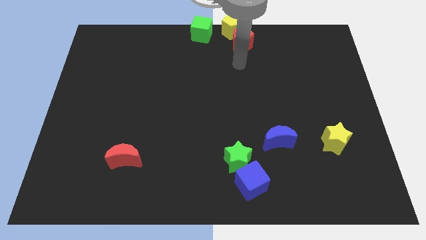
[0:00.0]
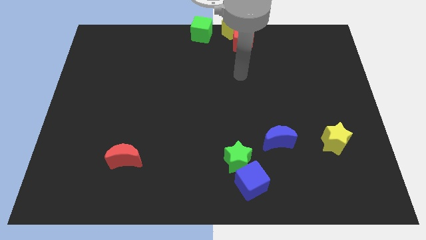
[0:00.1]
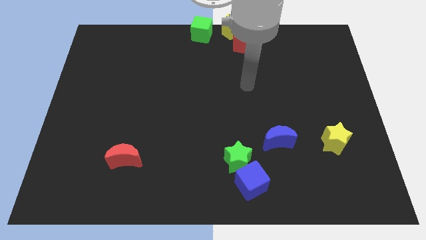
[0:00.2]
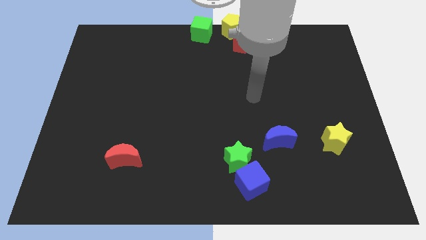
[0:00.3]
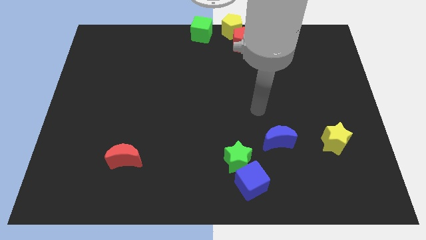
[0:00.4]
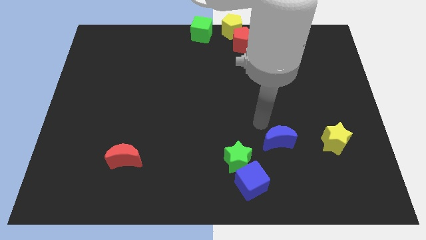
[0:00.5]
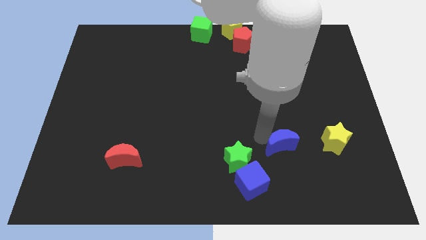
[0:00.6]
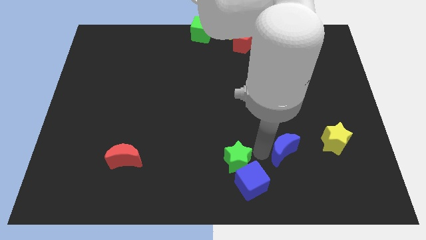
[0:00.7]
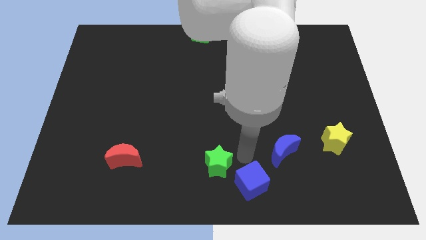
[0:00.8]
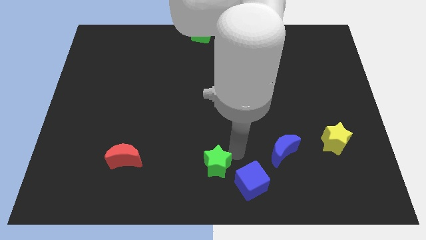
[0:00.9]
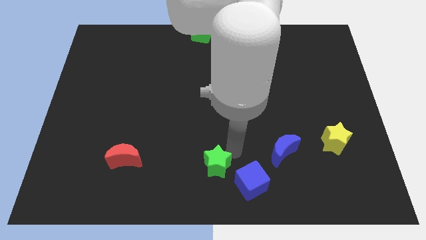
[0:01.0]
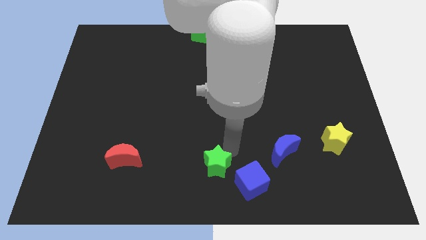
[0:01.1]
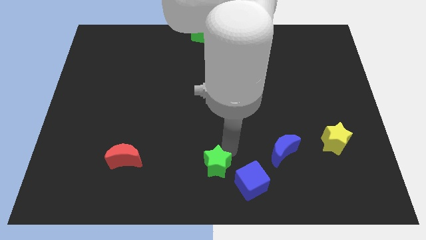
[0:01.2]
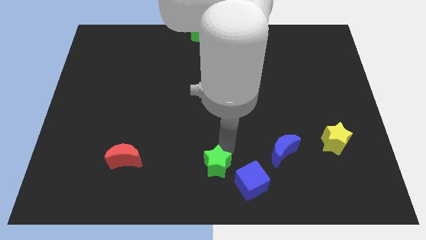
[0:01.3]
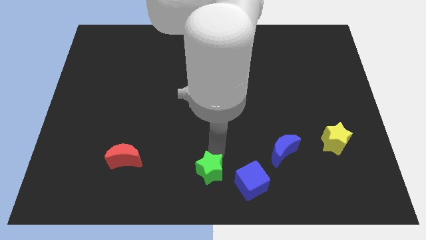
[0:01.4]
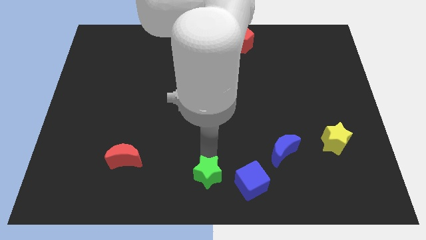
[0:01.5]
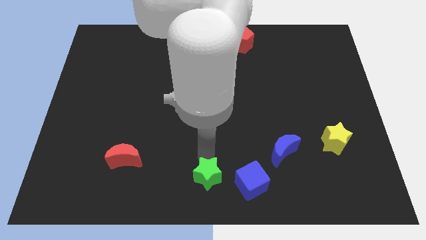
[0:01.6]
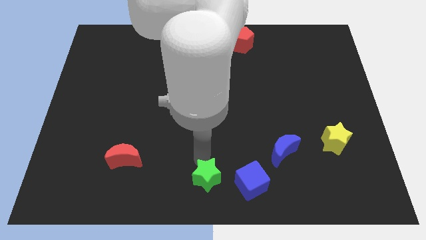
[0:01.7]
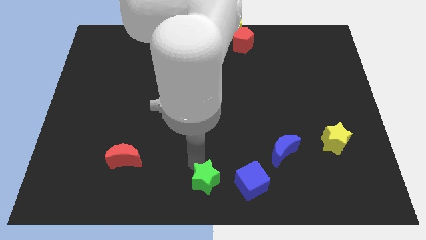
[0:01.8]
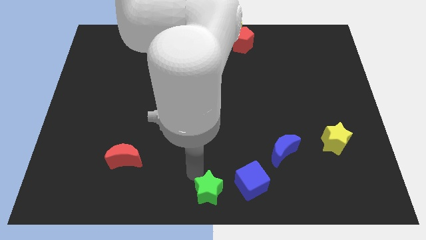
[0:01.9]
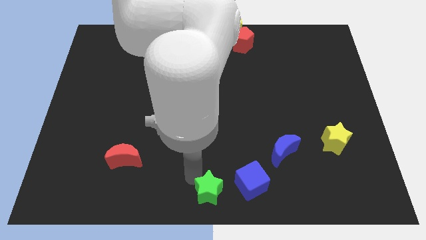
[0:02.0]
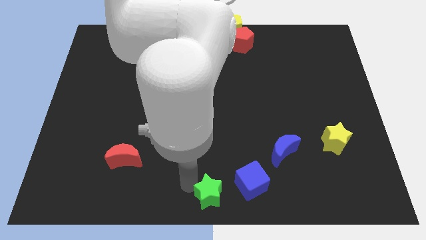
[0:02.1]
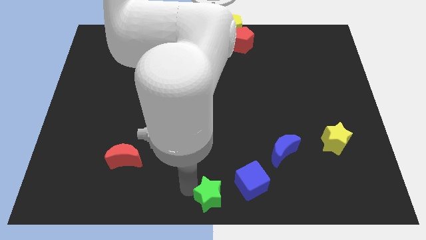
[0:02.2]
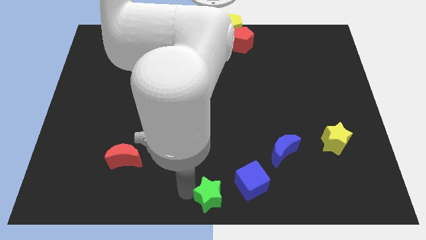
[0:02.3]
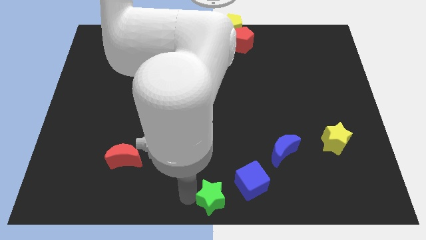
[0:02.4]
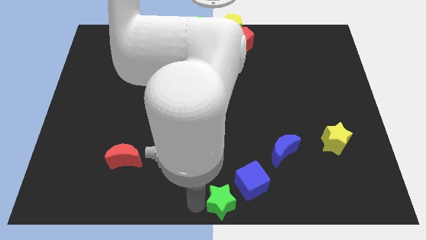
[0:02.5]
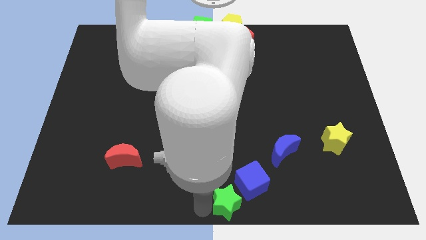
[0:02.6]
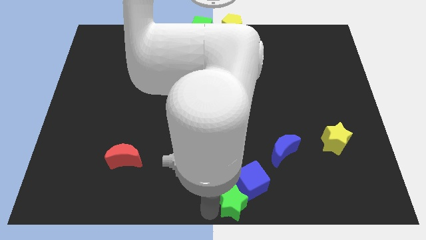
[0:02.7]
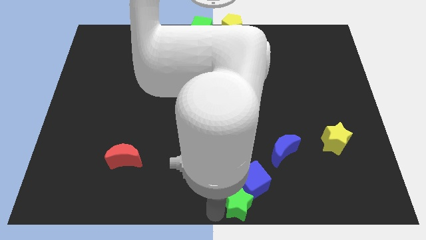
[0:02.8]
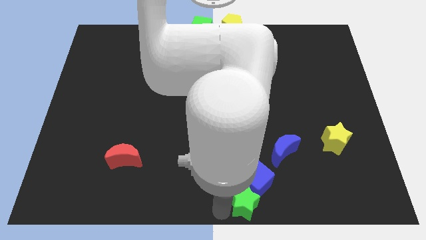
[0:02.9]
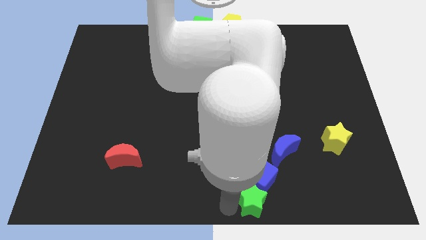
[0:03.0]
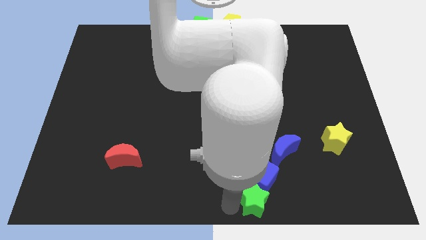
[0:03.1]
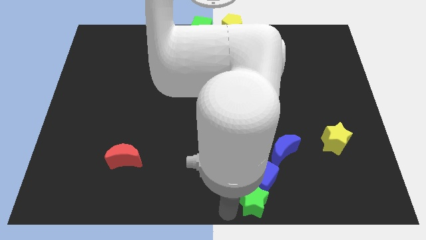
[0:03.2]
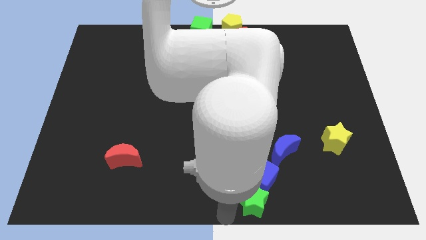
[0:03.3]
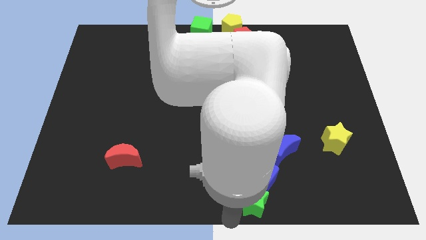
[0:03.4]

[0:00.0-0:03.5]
push the green star into the blue cube

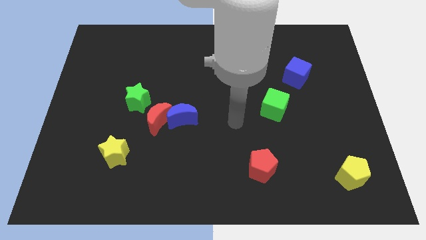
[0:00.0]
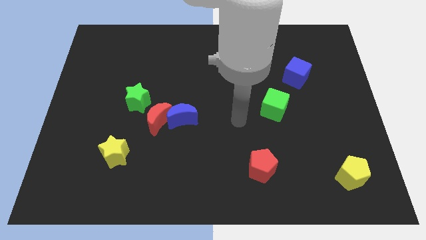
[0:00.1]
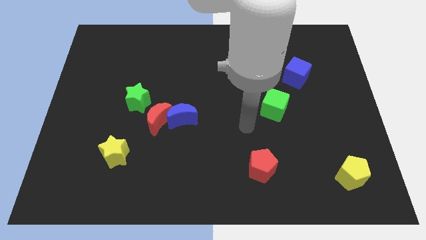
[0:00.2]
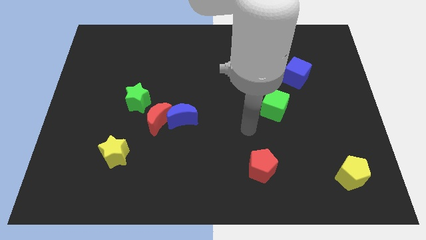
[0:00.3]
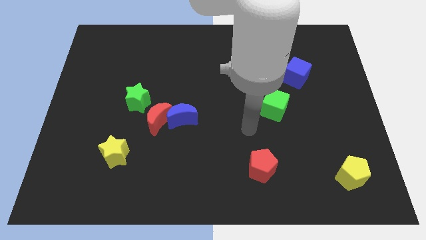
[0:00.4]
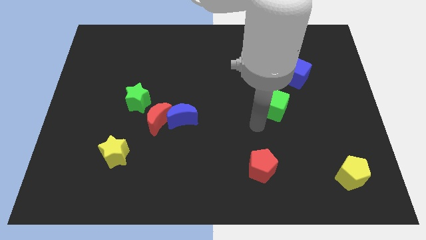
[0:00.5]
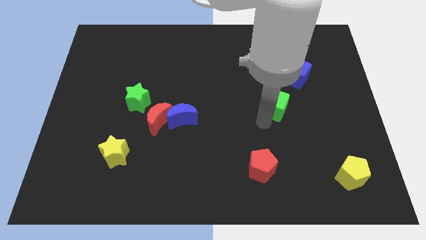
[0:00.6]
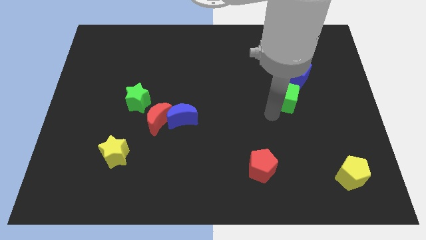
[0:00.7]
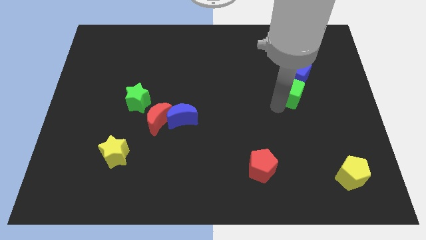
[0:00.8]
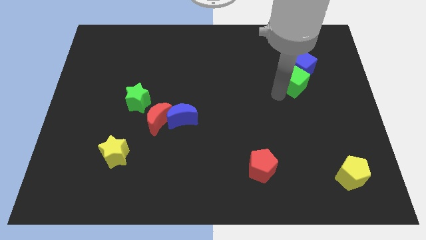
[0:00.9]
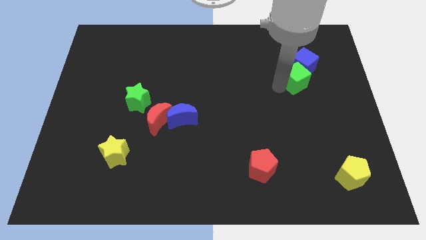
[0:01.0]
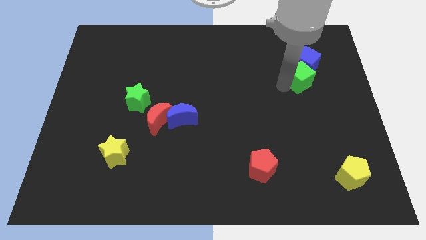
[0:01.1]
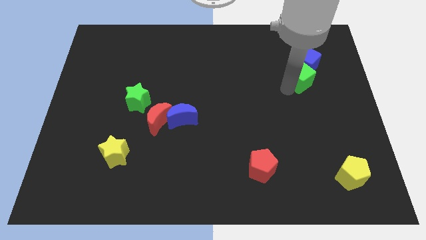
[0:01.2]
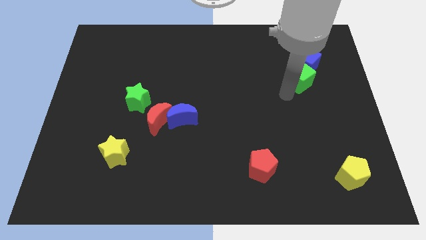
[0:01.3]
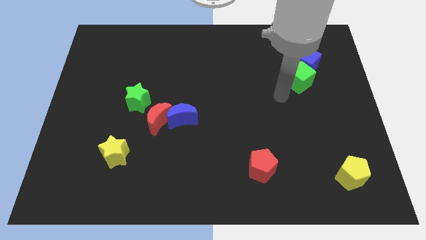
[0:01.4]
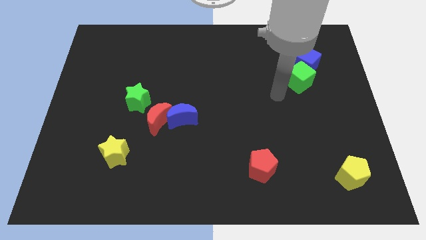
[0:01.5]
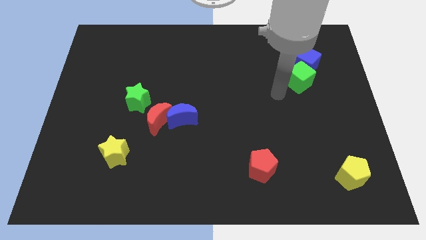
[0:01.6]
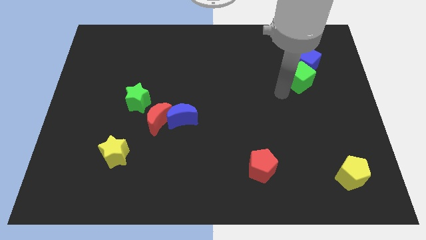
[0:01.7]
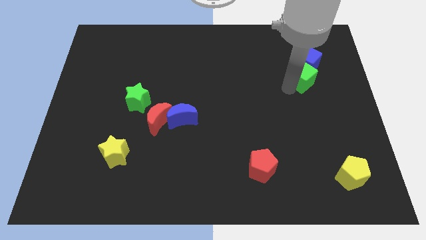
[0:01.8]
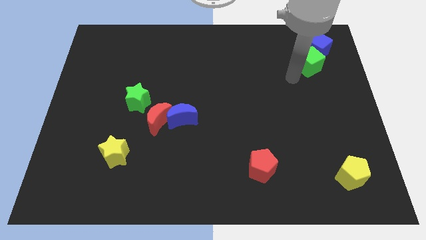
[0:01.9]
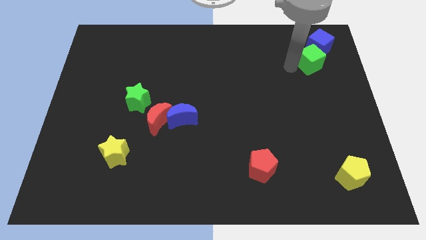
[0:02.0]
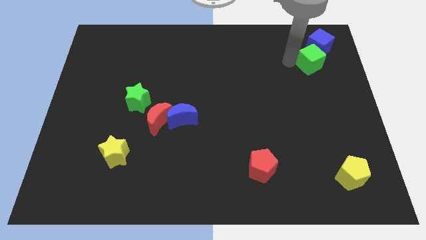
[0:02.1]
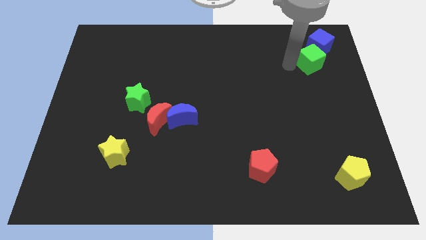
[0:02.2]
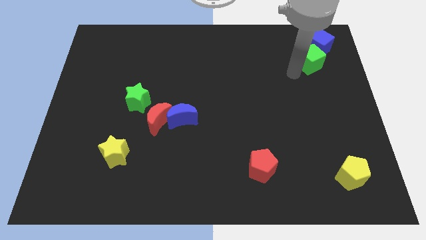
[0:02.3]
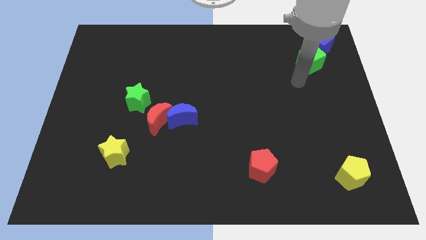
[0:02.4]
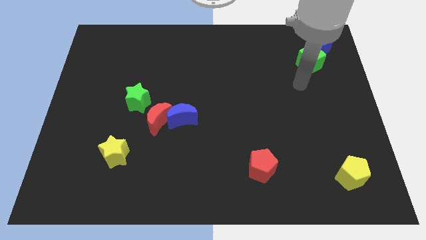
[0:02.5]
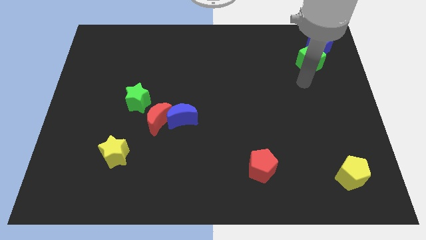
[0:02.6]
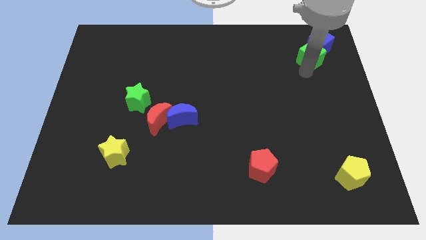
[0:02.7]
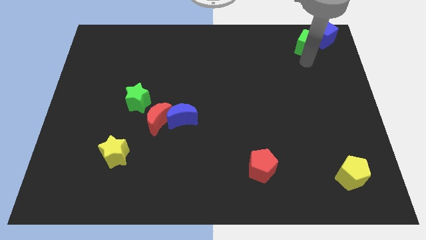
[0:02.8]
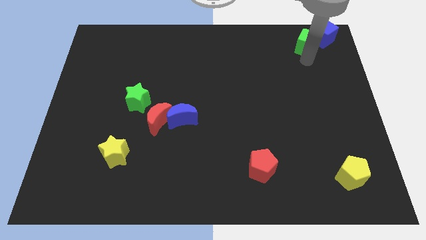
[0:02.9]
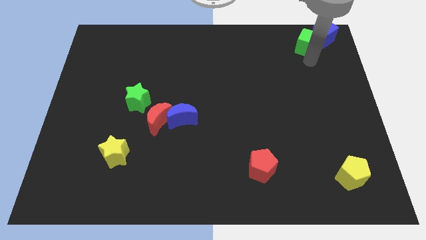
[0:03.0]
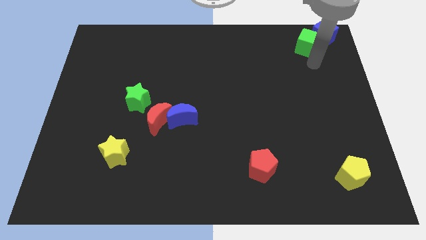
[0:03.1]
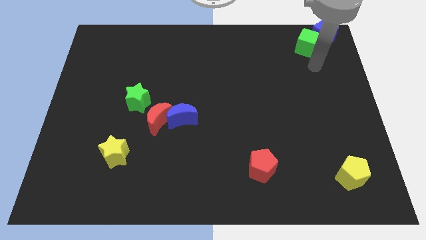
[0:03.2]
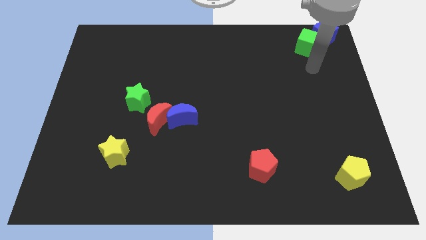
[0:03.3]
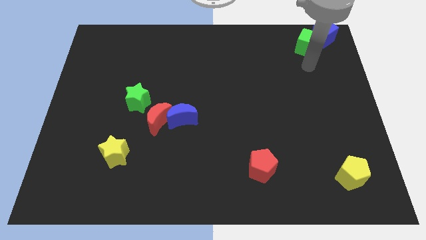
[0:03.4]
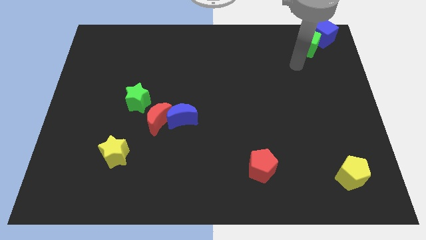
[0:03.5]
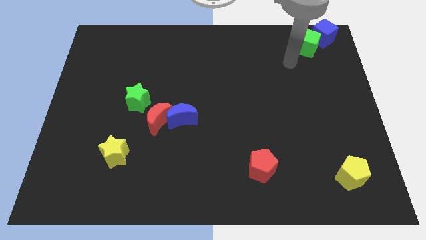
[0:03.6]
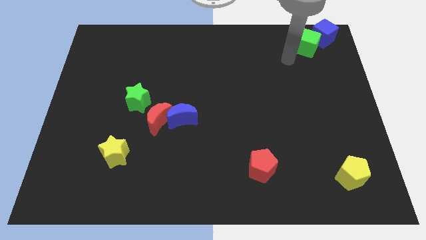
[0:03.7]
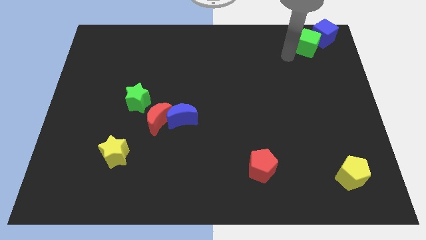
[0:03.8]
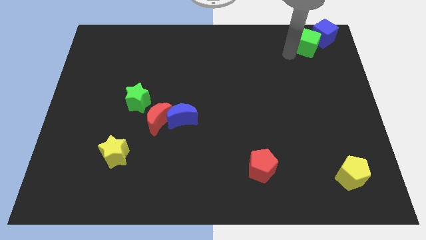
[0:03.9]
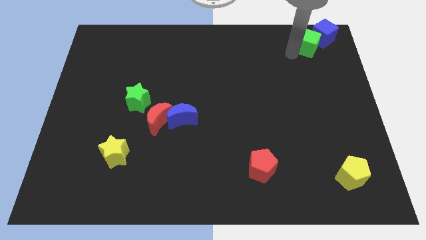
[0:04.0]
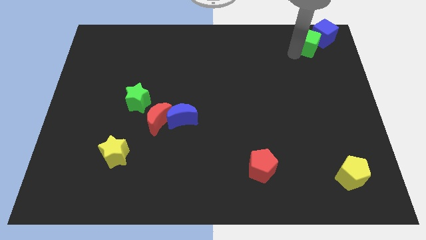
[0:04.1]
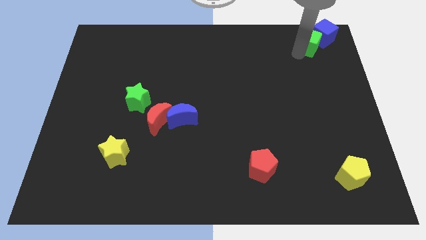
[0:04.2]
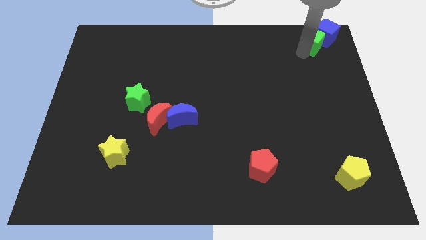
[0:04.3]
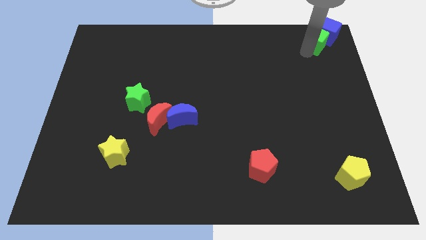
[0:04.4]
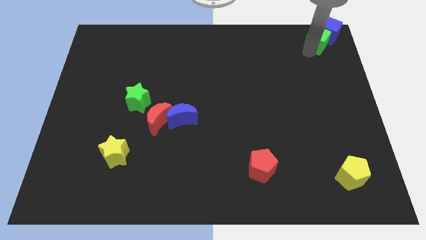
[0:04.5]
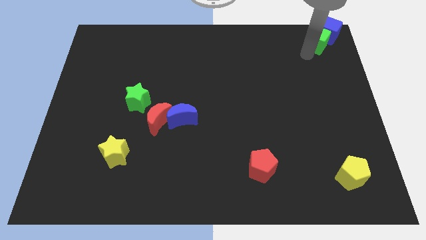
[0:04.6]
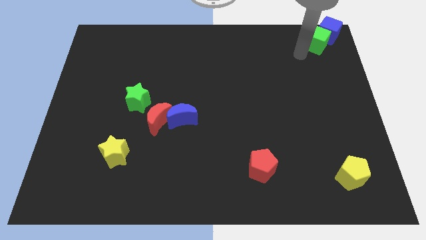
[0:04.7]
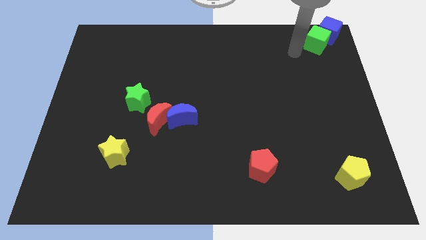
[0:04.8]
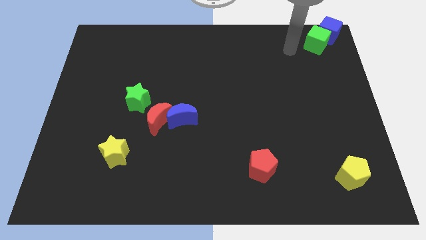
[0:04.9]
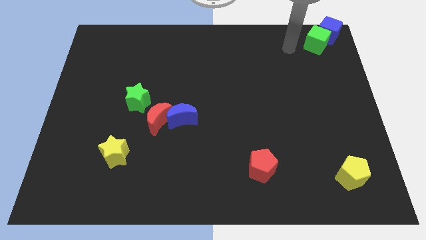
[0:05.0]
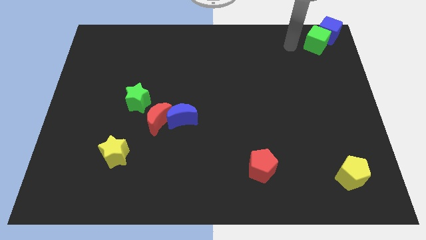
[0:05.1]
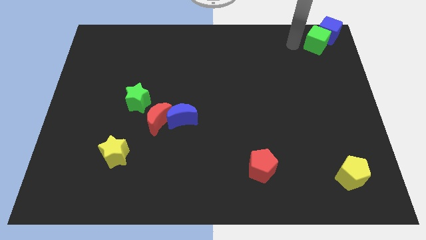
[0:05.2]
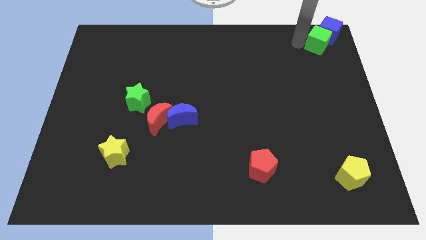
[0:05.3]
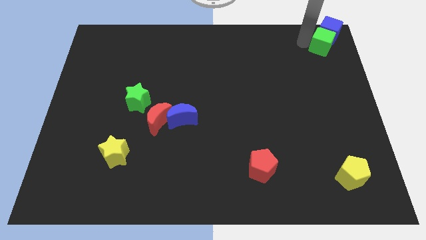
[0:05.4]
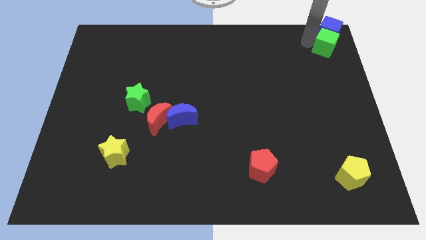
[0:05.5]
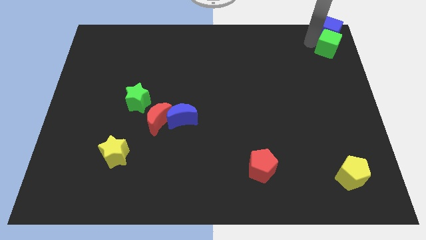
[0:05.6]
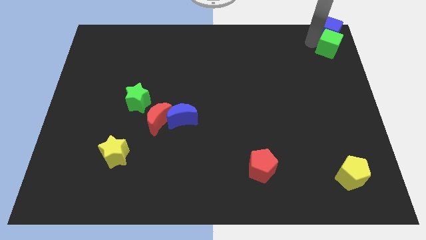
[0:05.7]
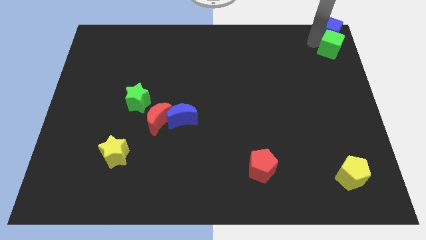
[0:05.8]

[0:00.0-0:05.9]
move green and blue cubes to the tiop right corner
